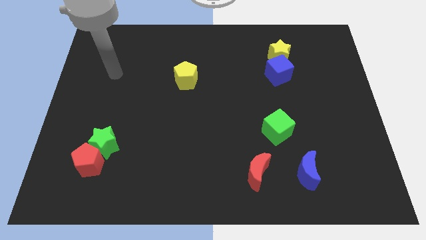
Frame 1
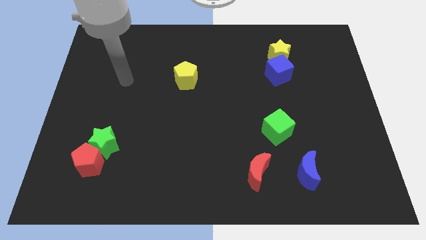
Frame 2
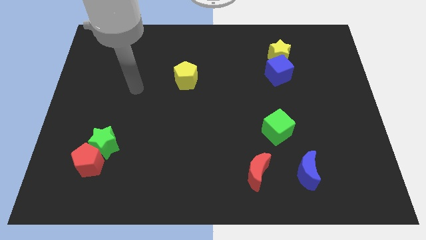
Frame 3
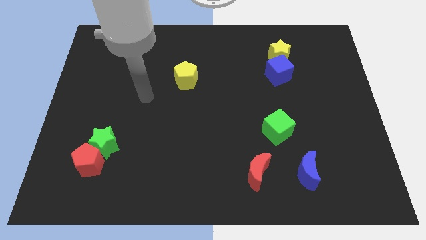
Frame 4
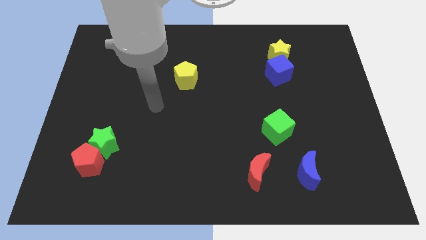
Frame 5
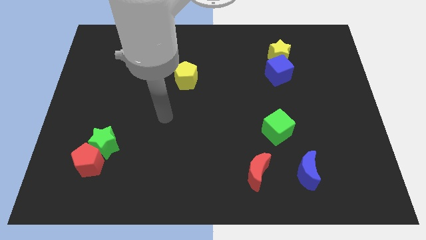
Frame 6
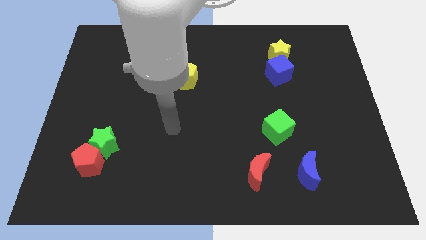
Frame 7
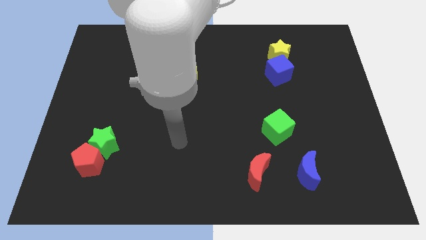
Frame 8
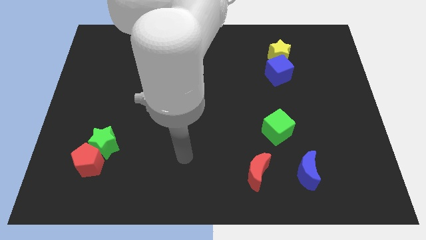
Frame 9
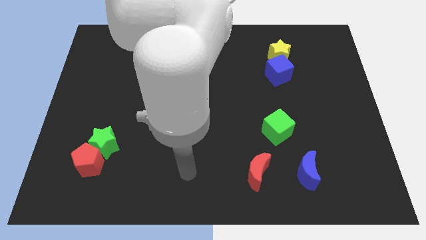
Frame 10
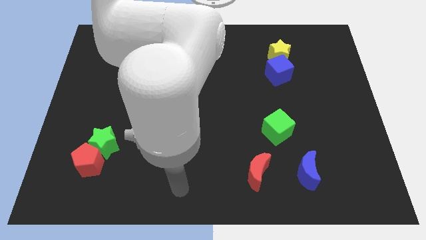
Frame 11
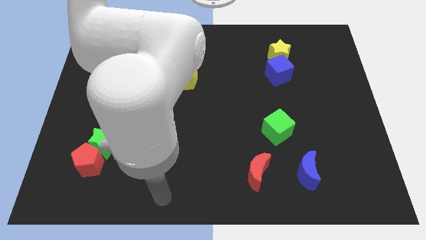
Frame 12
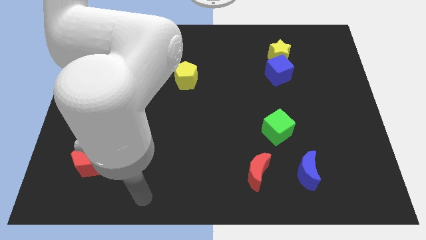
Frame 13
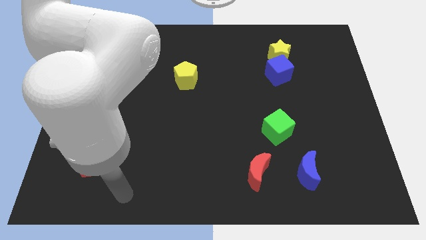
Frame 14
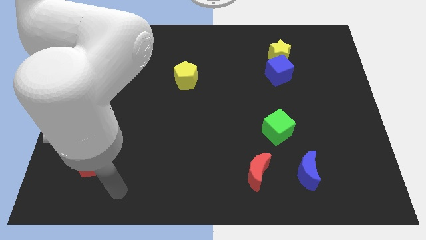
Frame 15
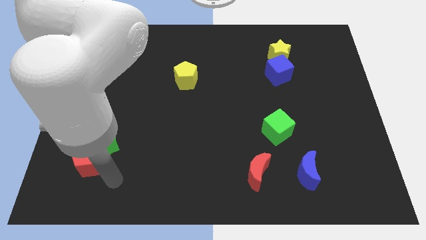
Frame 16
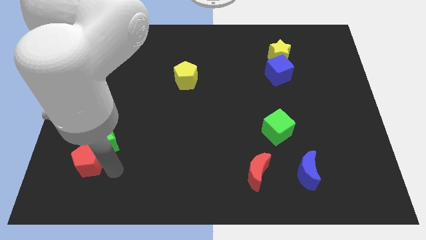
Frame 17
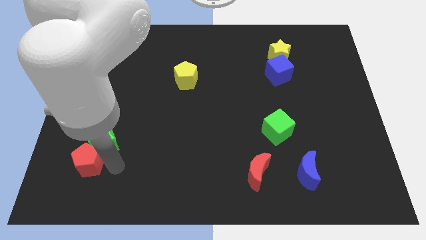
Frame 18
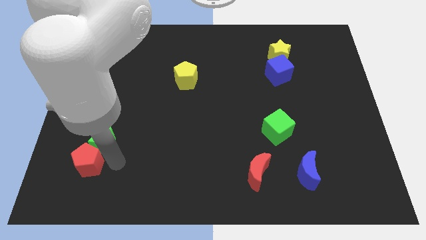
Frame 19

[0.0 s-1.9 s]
move your arm right to the red pentagon

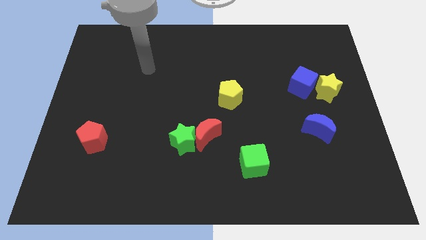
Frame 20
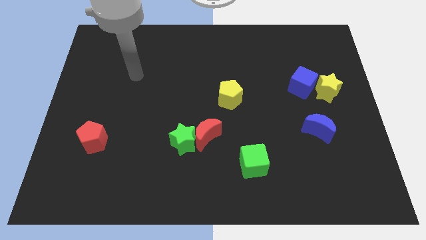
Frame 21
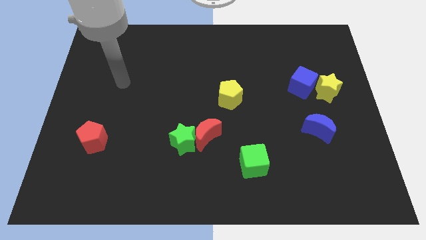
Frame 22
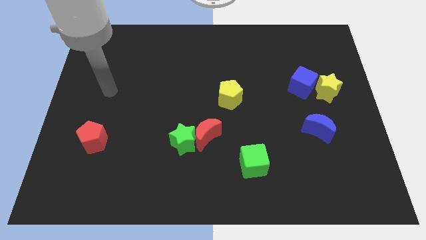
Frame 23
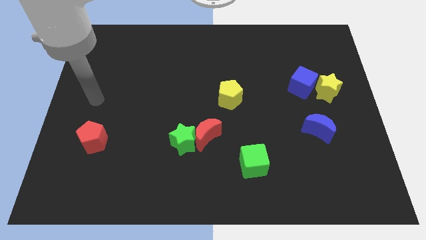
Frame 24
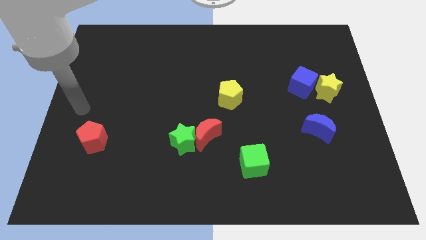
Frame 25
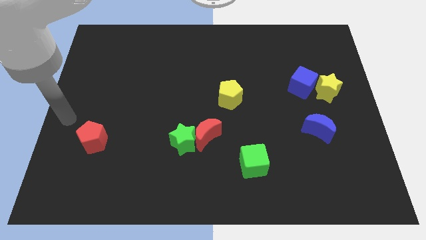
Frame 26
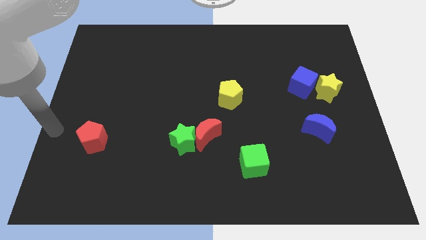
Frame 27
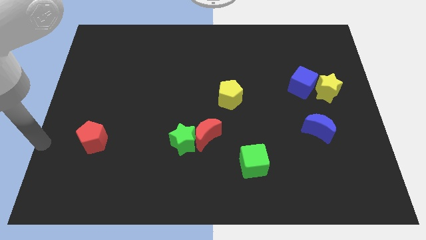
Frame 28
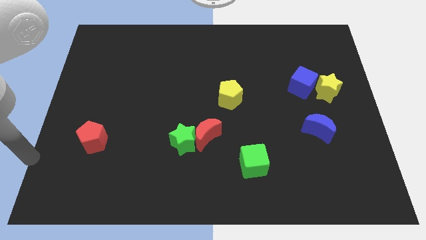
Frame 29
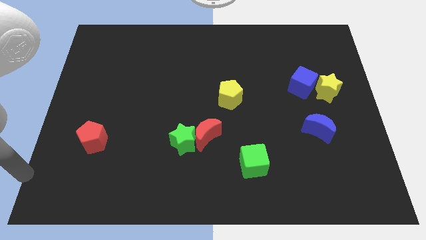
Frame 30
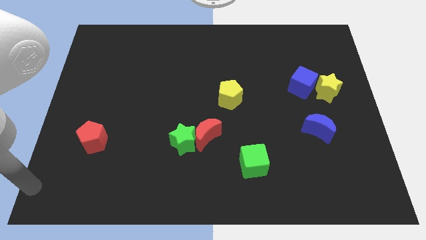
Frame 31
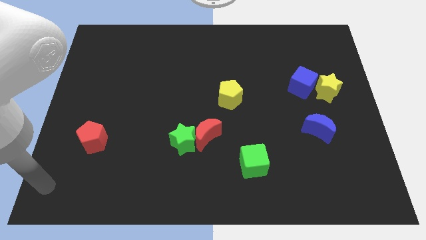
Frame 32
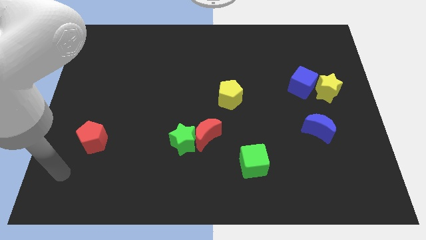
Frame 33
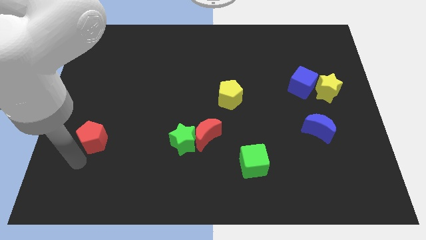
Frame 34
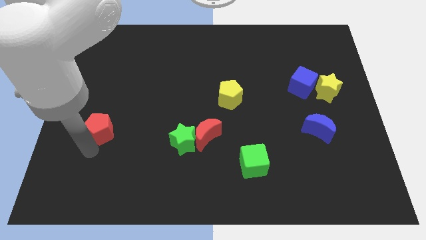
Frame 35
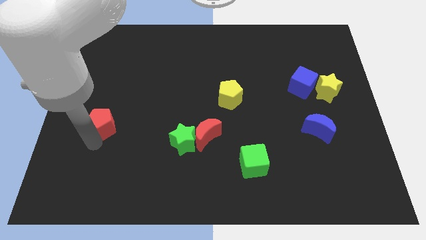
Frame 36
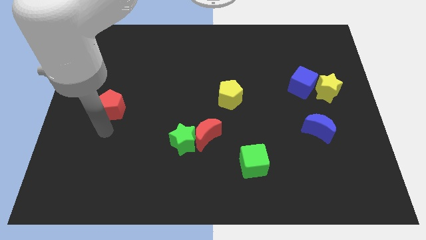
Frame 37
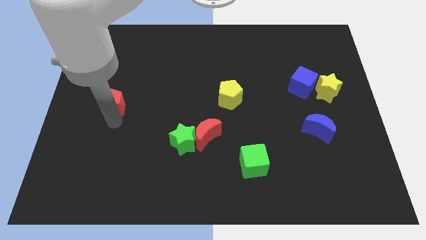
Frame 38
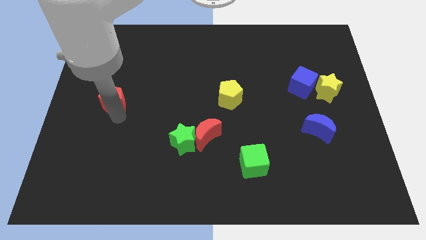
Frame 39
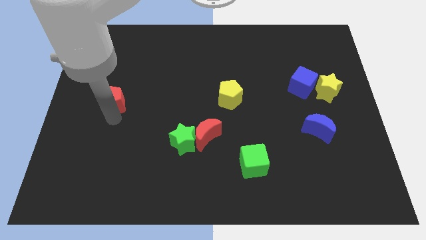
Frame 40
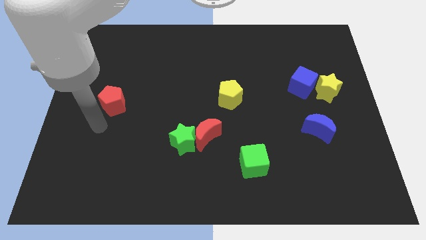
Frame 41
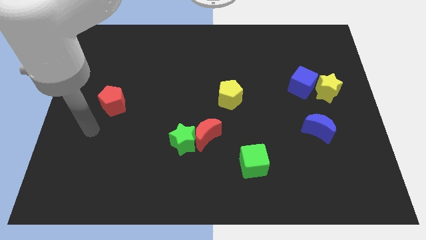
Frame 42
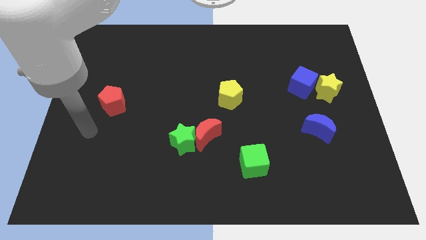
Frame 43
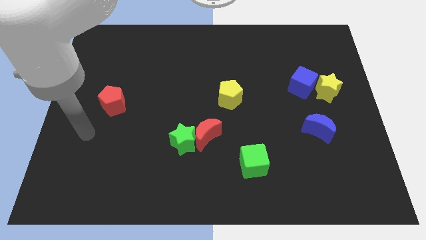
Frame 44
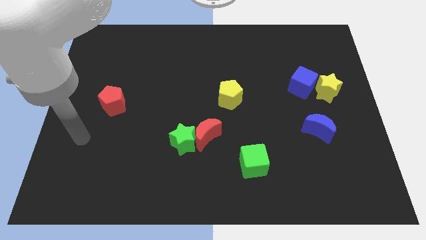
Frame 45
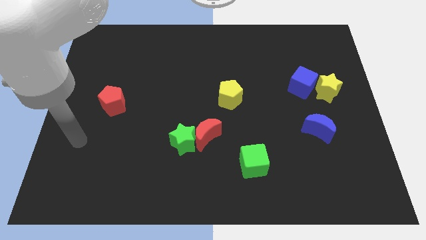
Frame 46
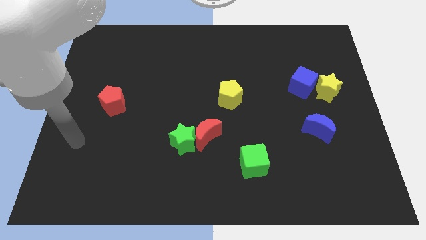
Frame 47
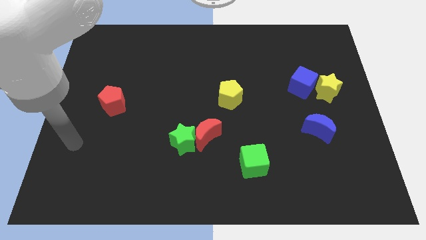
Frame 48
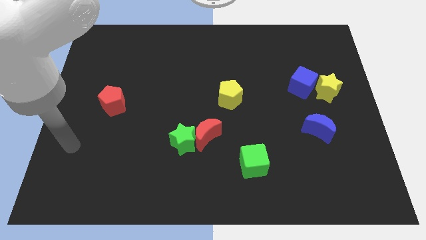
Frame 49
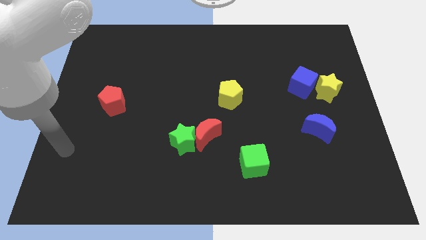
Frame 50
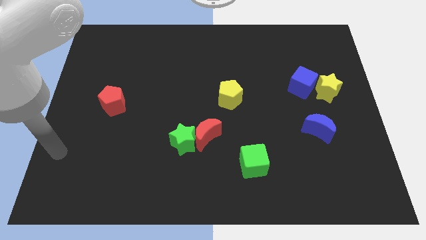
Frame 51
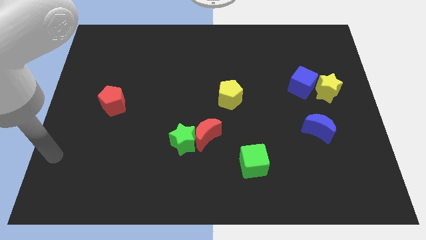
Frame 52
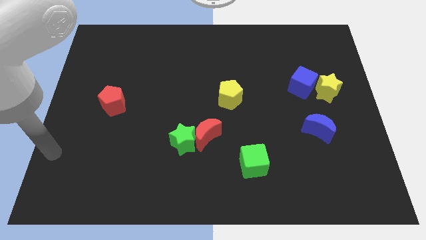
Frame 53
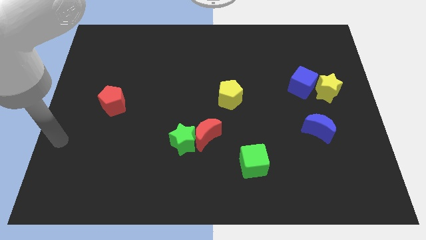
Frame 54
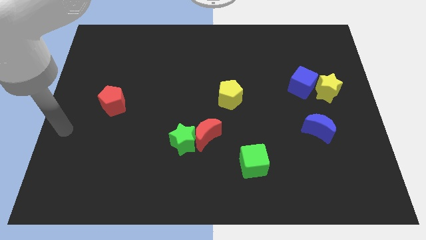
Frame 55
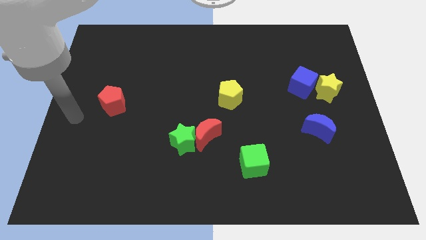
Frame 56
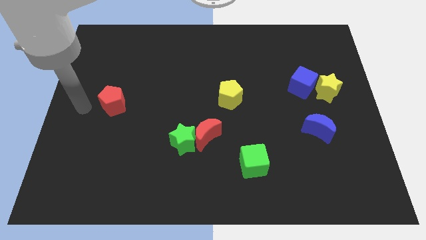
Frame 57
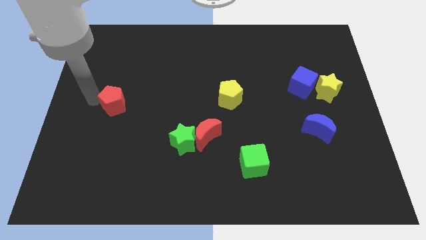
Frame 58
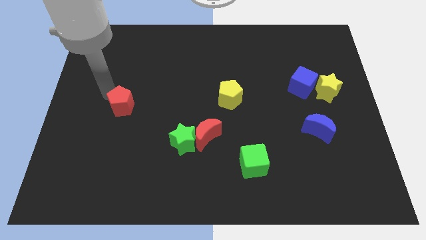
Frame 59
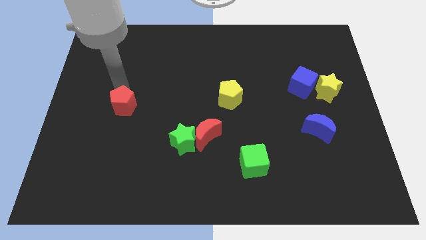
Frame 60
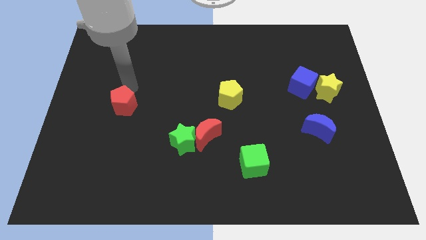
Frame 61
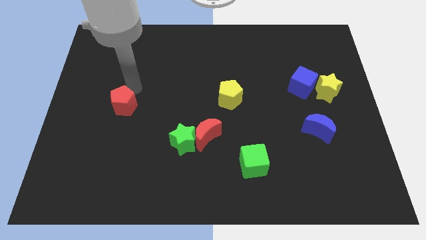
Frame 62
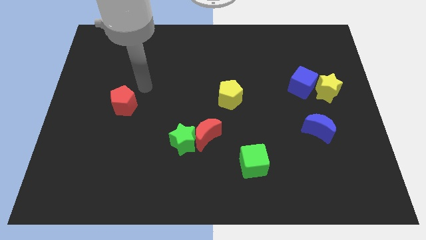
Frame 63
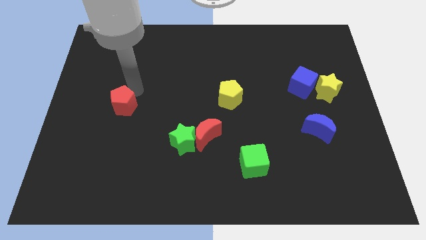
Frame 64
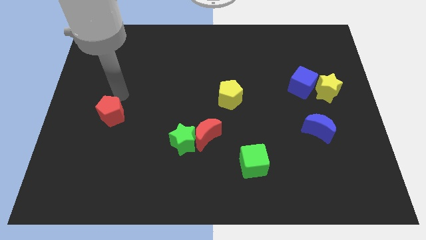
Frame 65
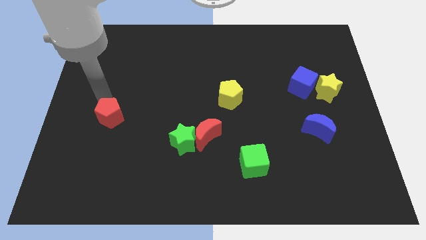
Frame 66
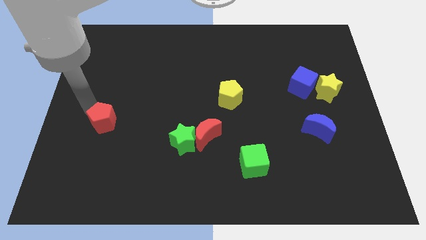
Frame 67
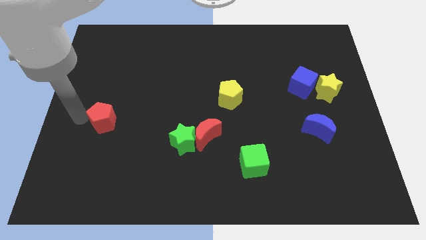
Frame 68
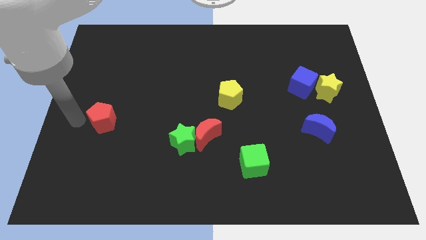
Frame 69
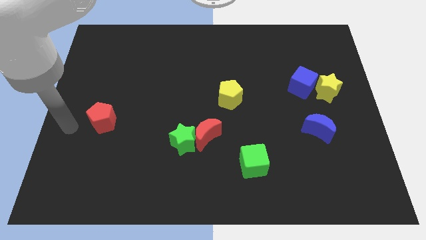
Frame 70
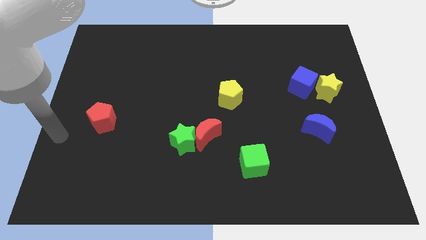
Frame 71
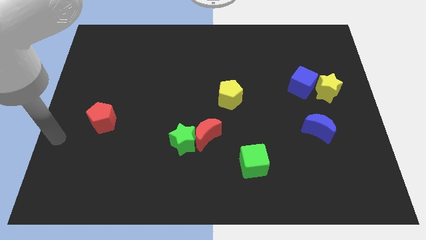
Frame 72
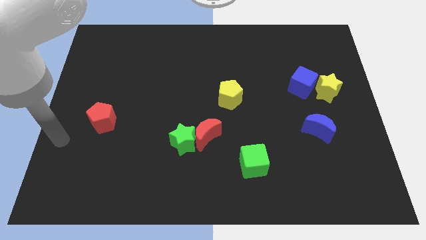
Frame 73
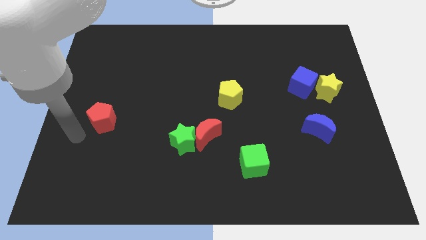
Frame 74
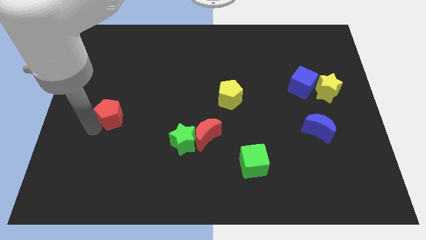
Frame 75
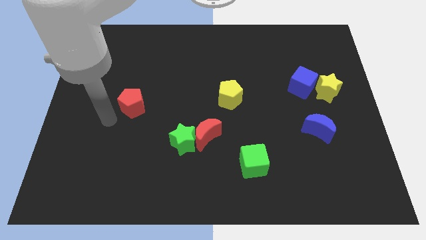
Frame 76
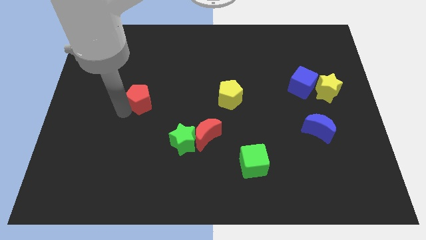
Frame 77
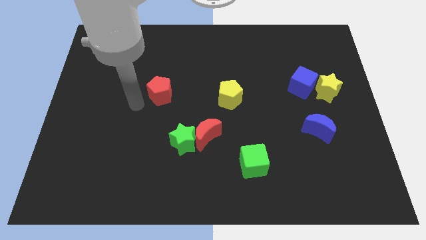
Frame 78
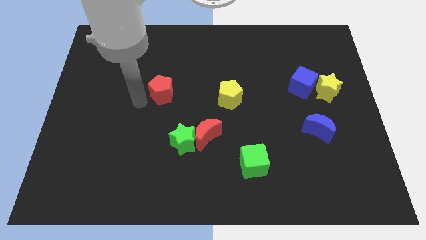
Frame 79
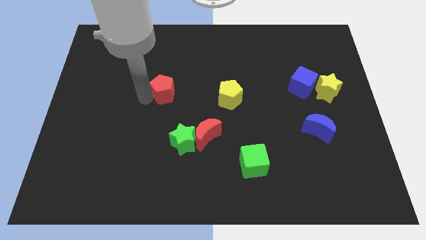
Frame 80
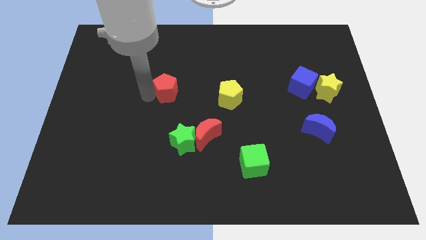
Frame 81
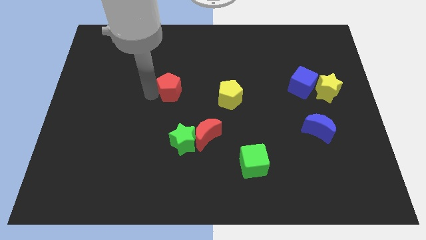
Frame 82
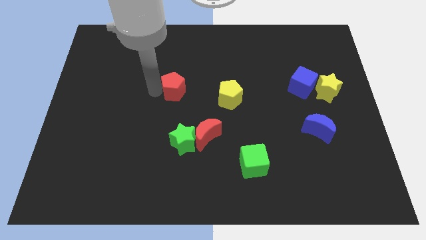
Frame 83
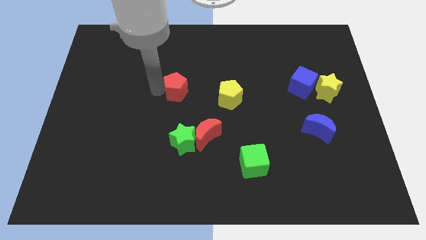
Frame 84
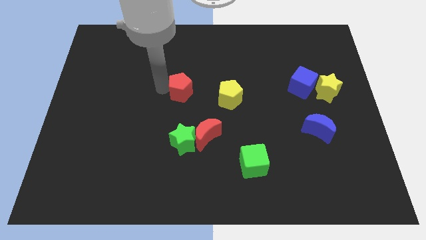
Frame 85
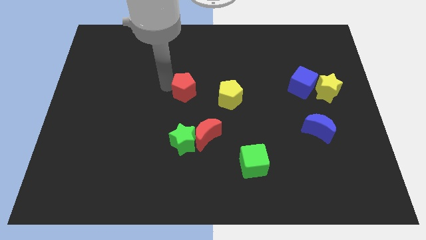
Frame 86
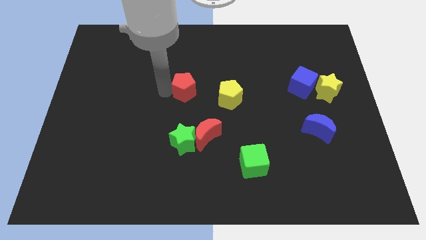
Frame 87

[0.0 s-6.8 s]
push the red pentagon to the center of the board

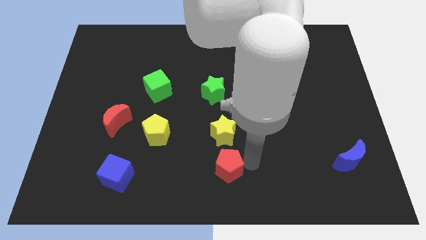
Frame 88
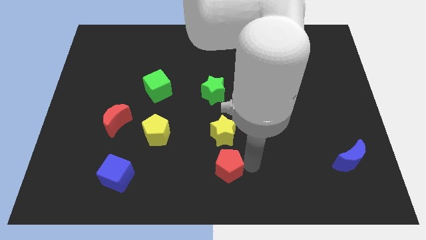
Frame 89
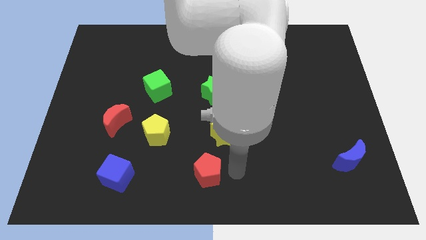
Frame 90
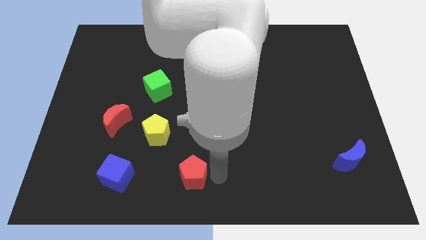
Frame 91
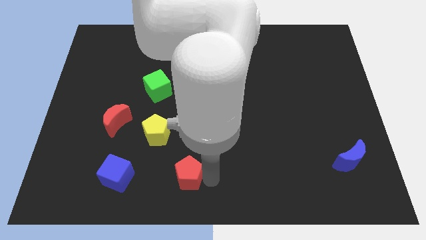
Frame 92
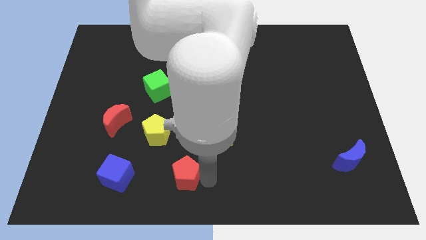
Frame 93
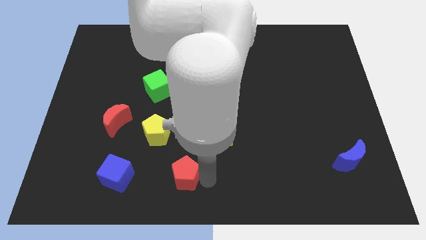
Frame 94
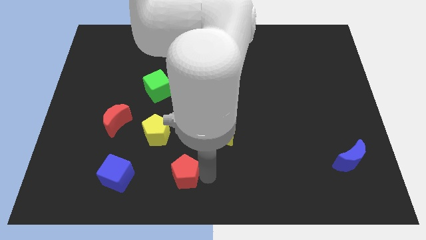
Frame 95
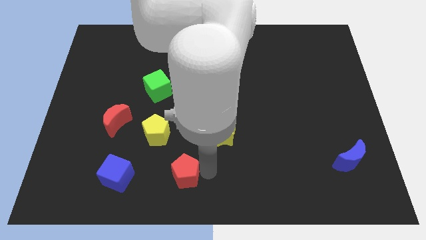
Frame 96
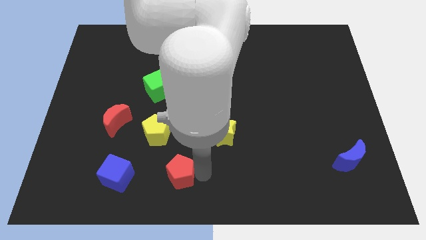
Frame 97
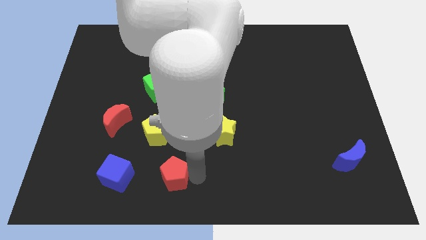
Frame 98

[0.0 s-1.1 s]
move the red pentagon slightly left
